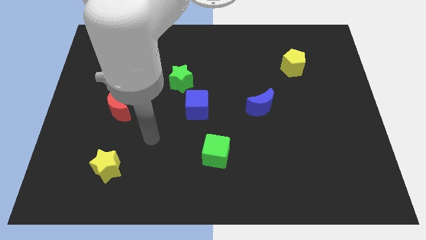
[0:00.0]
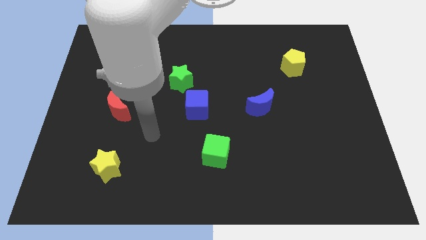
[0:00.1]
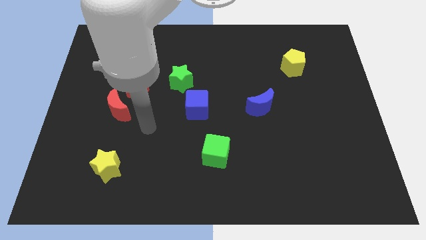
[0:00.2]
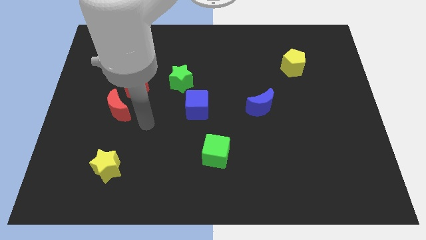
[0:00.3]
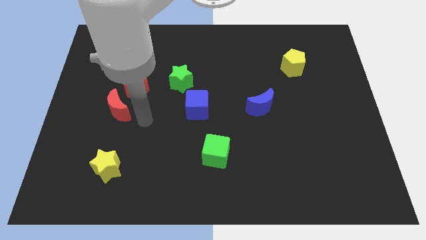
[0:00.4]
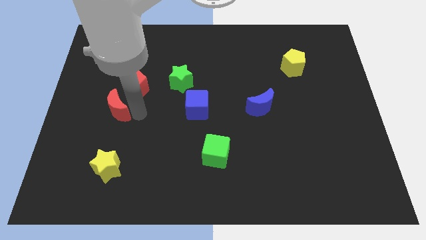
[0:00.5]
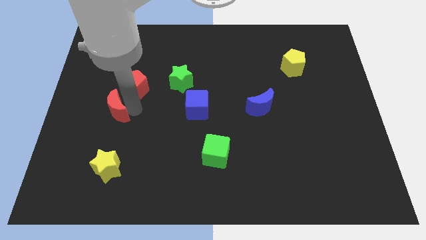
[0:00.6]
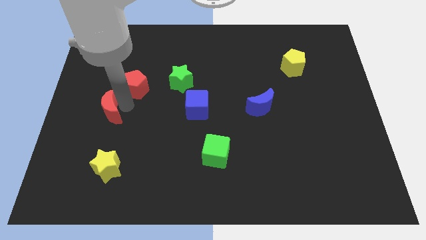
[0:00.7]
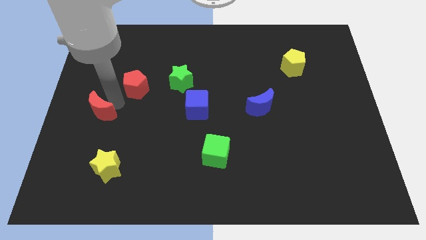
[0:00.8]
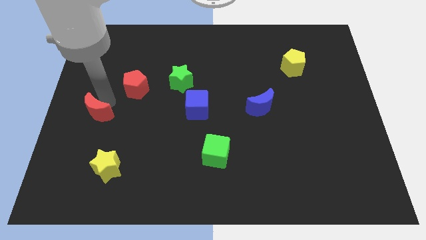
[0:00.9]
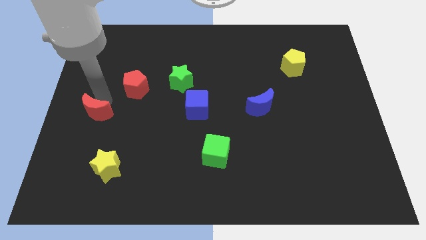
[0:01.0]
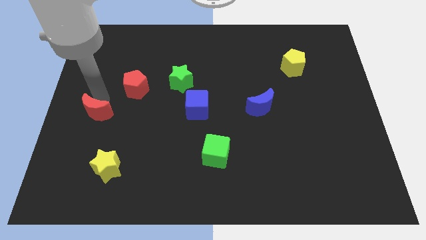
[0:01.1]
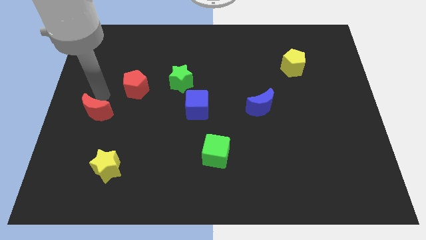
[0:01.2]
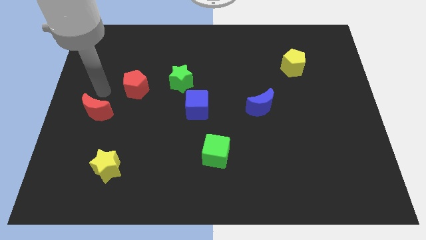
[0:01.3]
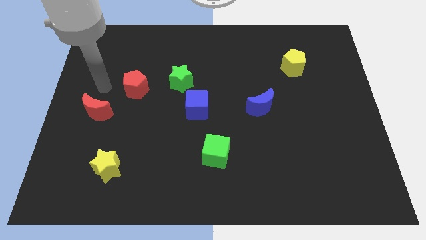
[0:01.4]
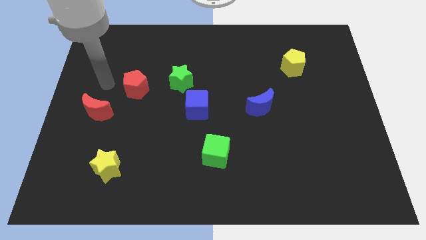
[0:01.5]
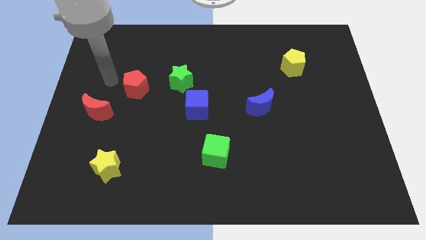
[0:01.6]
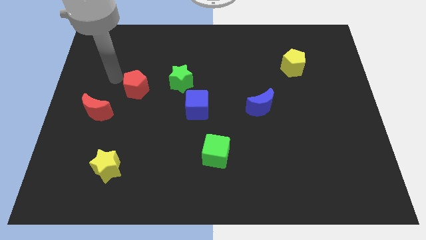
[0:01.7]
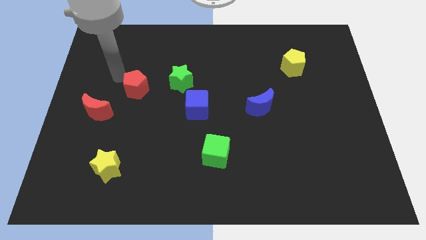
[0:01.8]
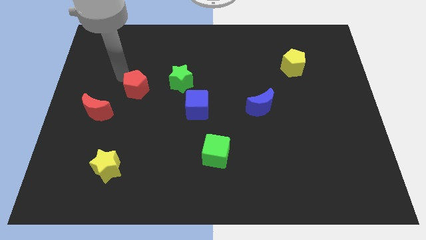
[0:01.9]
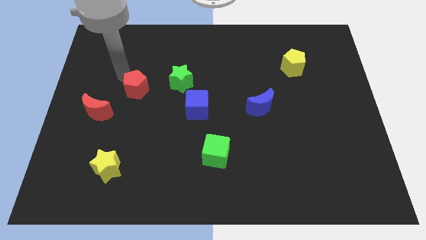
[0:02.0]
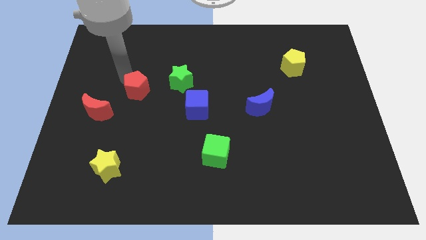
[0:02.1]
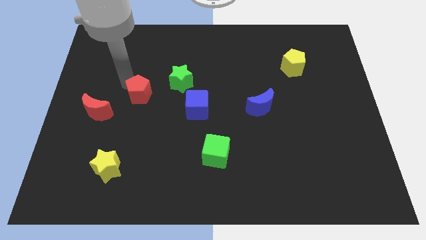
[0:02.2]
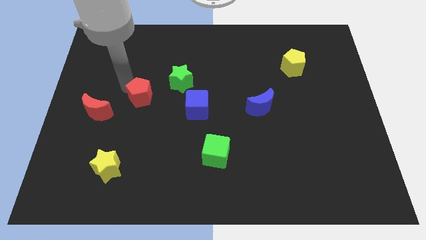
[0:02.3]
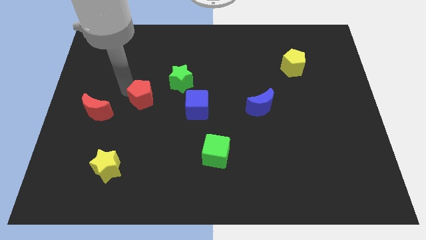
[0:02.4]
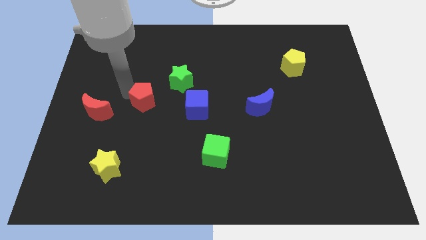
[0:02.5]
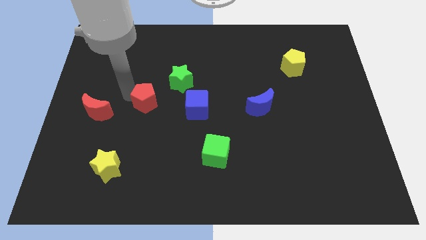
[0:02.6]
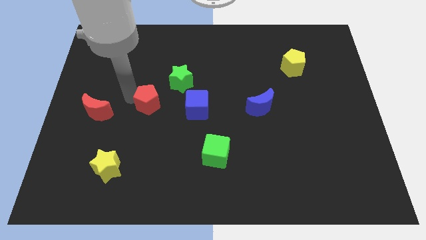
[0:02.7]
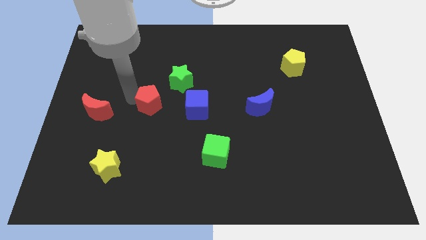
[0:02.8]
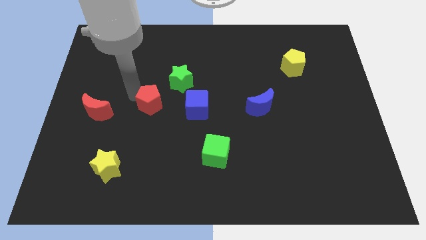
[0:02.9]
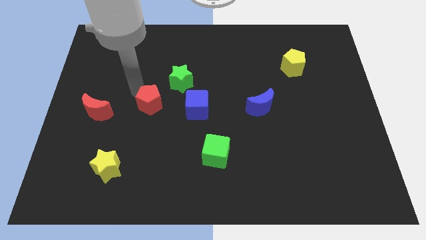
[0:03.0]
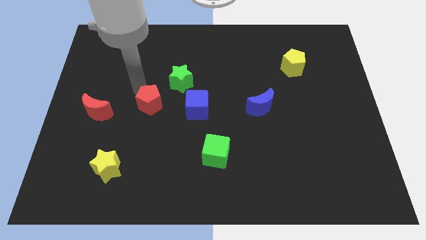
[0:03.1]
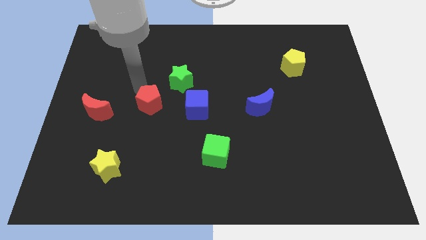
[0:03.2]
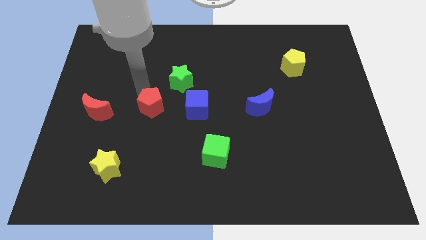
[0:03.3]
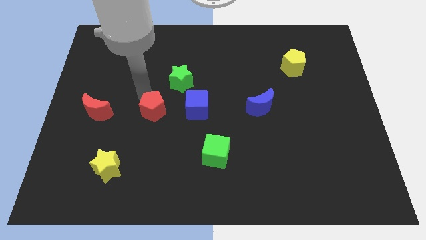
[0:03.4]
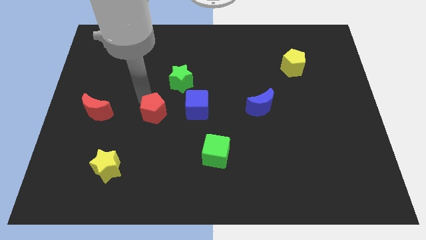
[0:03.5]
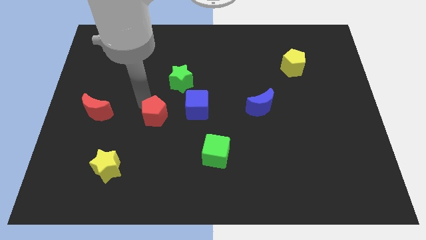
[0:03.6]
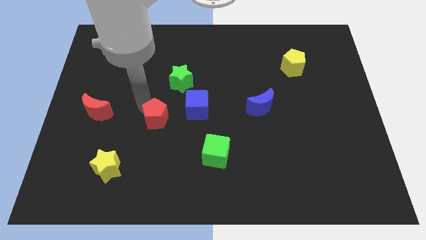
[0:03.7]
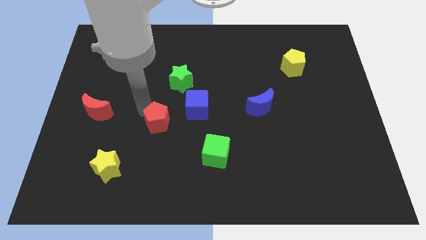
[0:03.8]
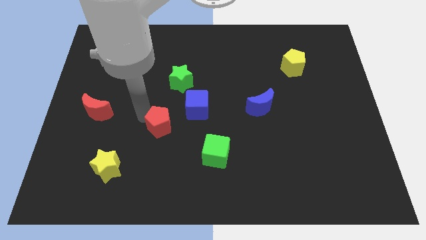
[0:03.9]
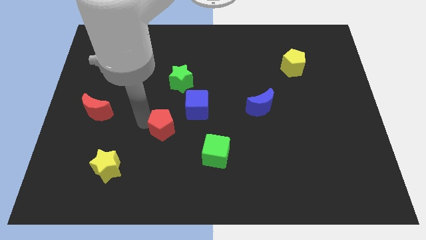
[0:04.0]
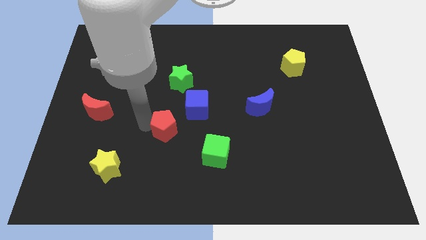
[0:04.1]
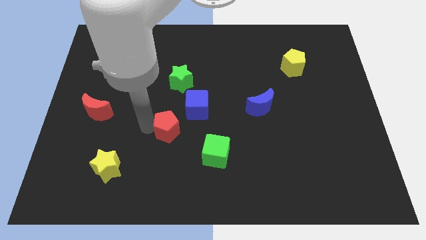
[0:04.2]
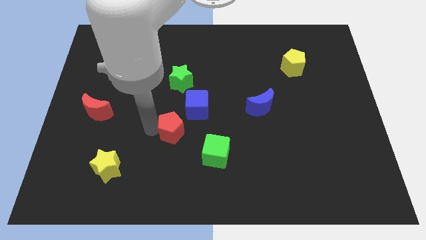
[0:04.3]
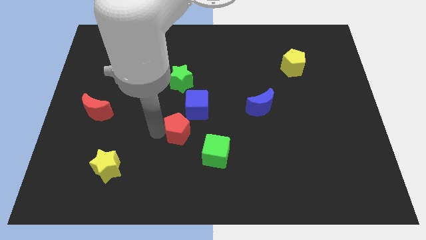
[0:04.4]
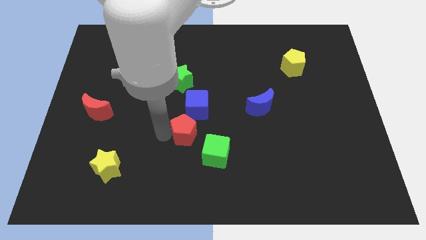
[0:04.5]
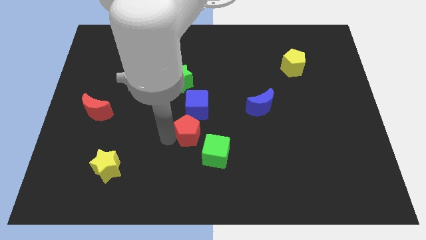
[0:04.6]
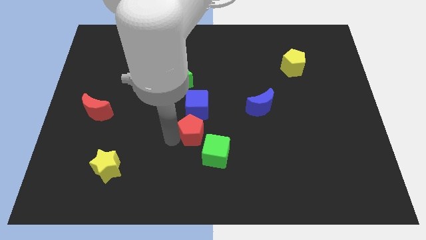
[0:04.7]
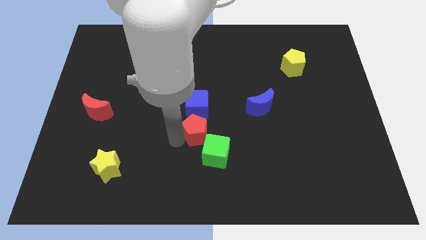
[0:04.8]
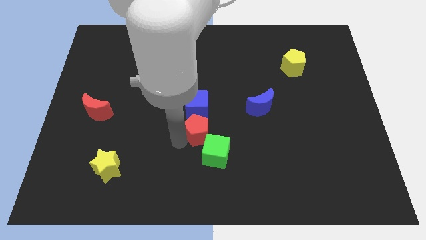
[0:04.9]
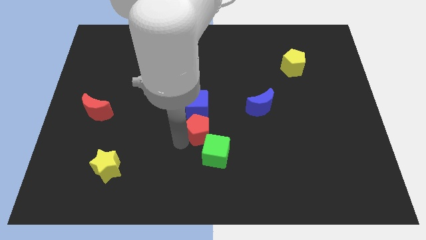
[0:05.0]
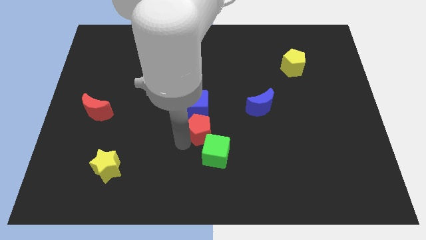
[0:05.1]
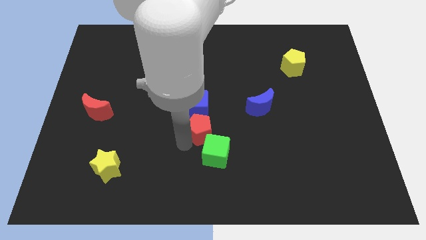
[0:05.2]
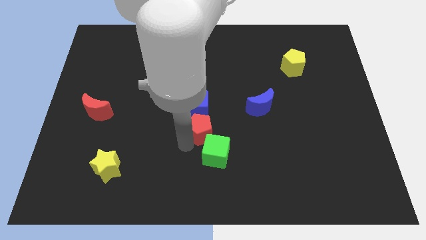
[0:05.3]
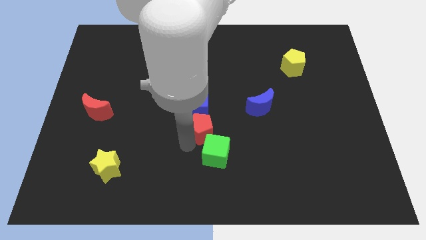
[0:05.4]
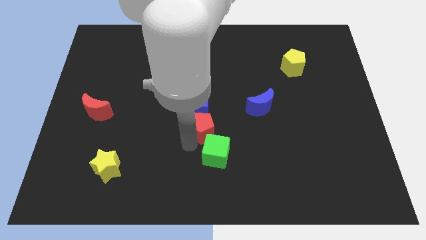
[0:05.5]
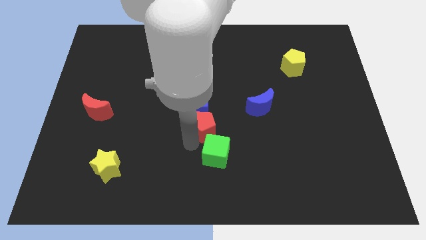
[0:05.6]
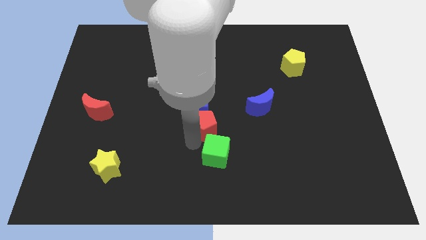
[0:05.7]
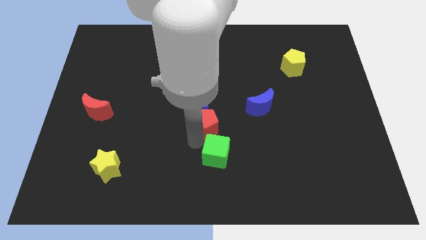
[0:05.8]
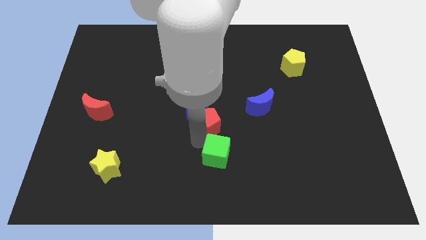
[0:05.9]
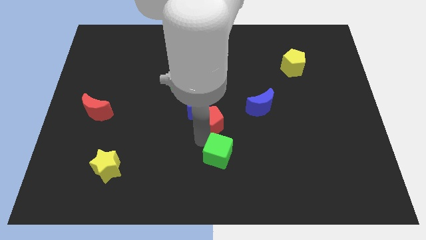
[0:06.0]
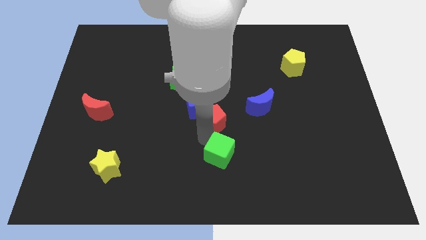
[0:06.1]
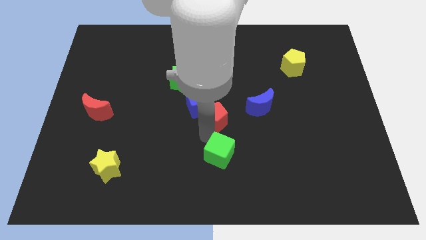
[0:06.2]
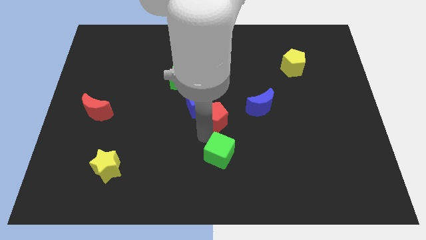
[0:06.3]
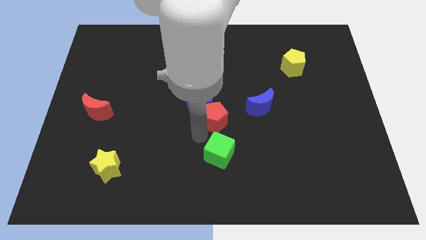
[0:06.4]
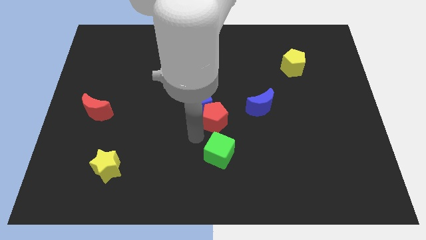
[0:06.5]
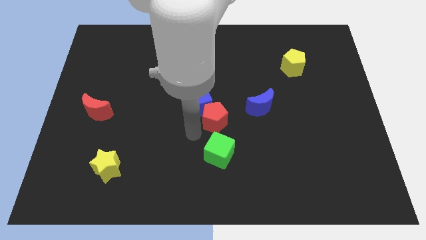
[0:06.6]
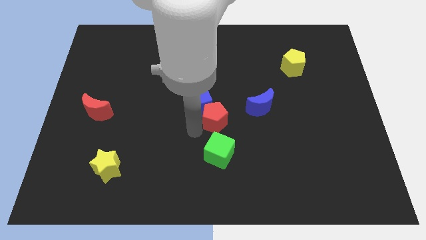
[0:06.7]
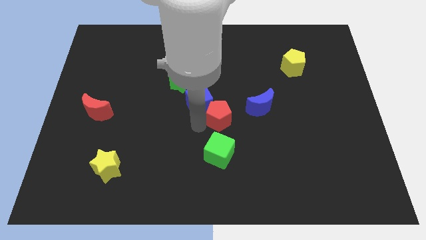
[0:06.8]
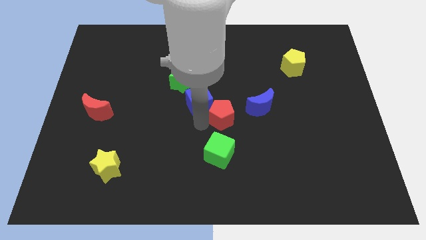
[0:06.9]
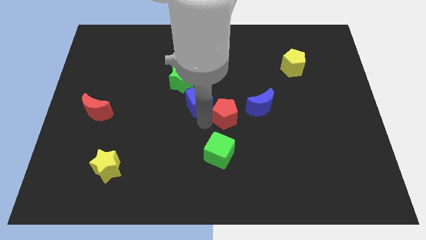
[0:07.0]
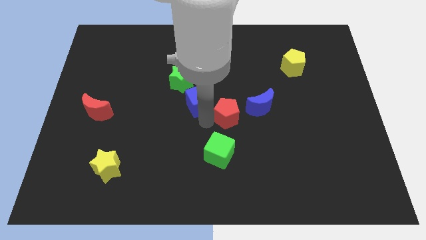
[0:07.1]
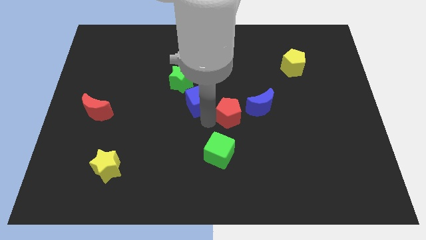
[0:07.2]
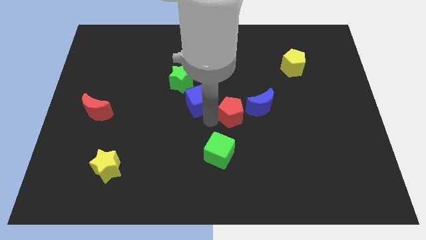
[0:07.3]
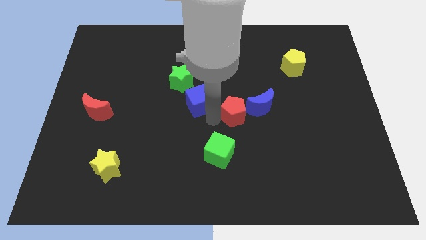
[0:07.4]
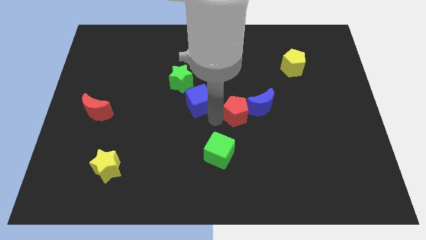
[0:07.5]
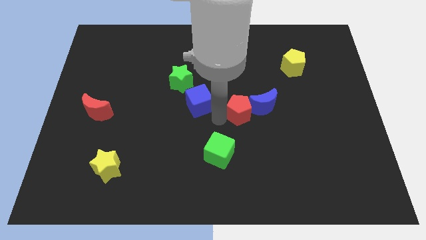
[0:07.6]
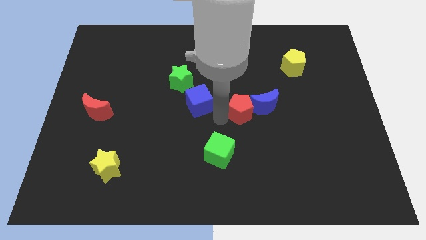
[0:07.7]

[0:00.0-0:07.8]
push the red pentagon close to the blue moon
